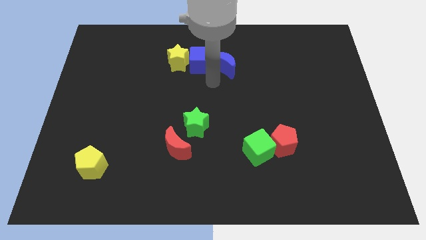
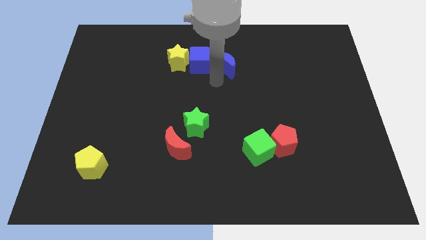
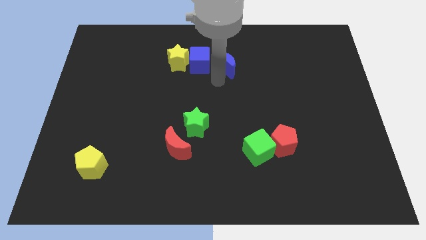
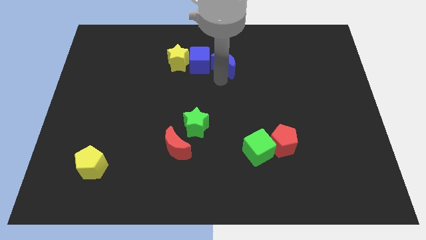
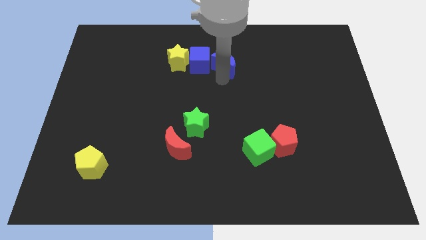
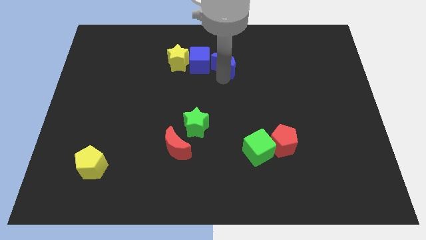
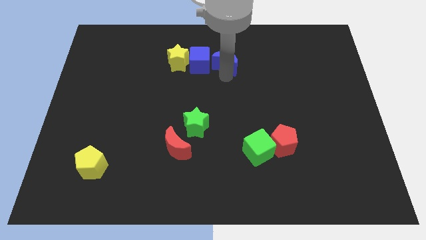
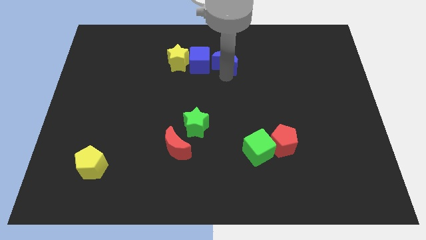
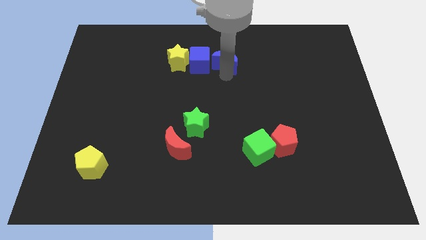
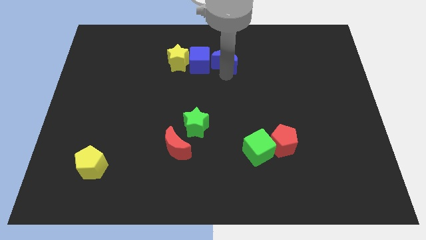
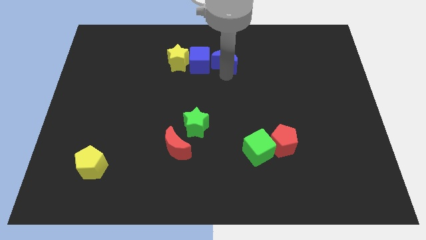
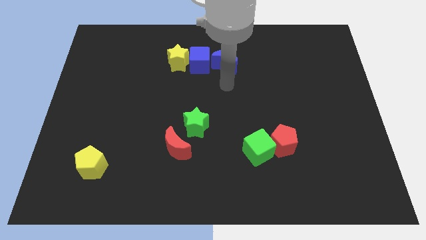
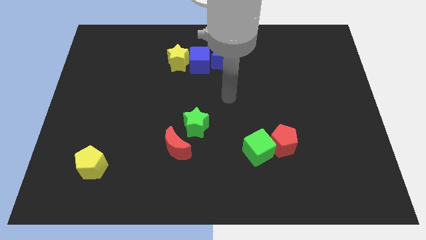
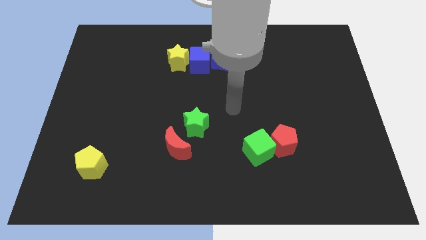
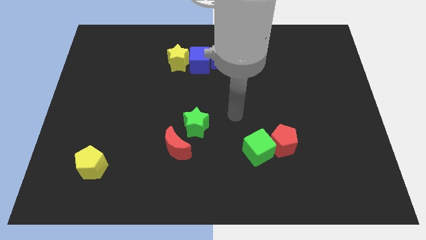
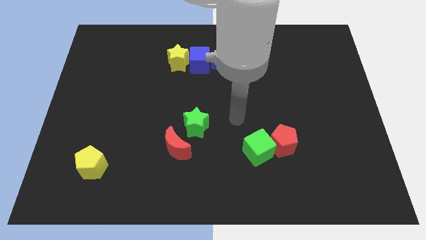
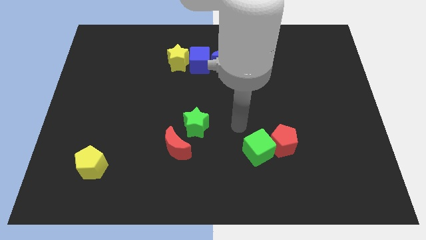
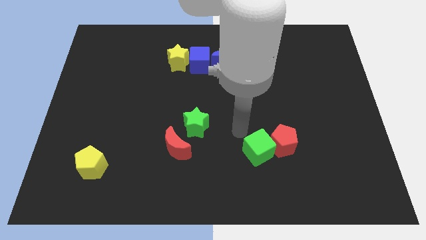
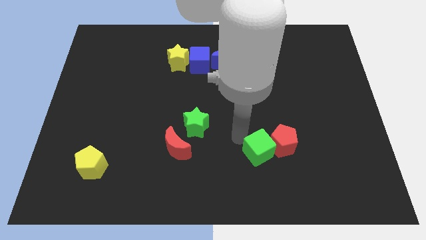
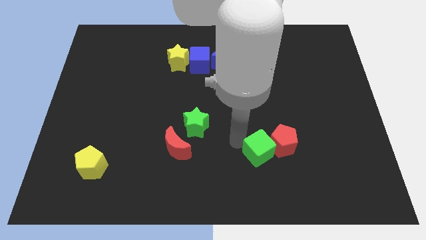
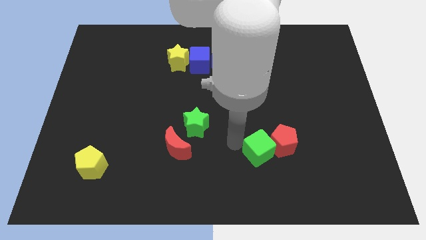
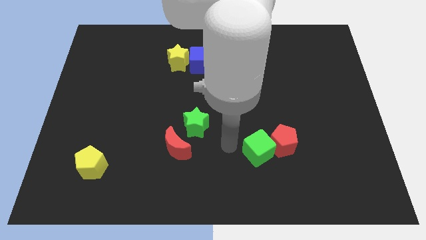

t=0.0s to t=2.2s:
move the arm to the left of green cube

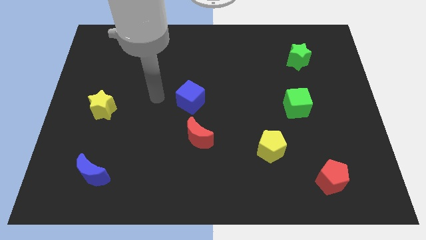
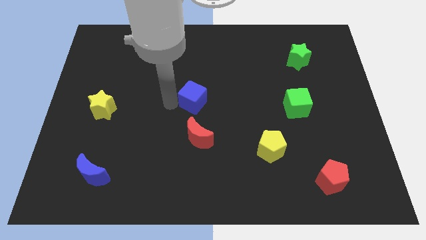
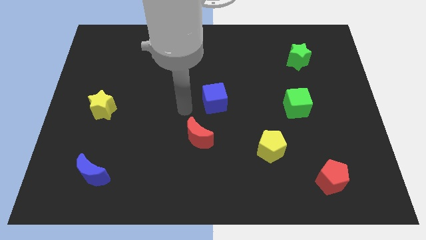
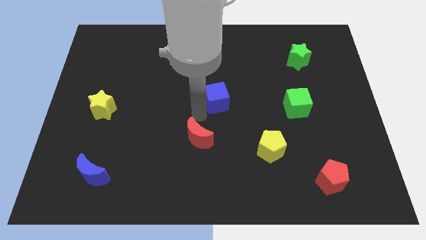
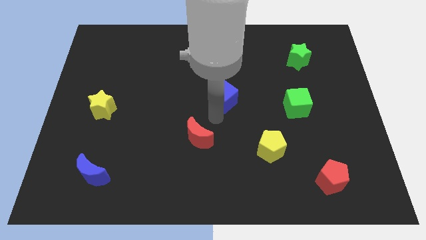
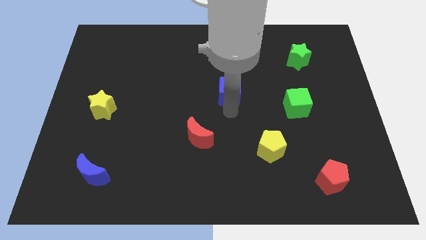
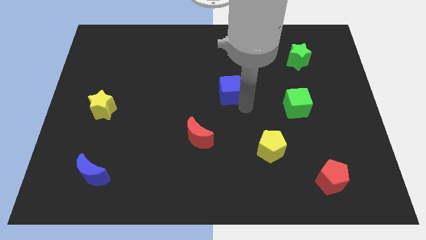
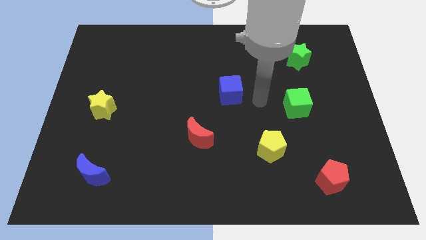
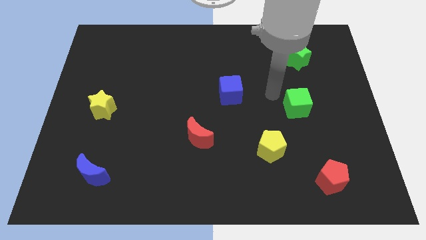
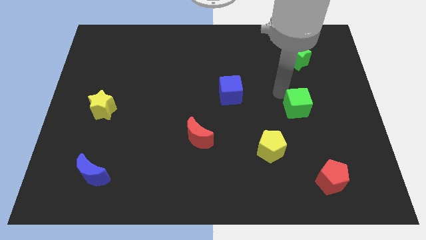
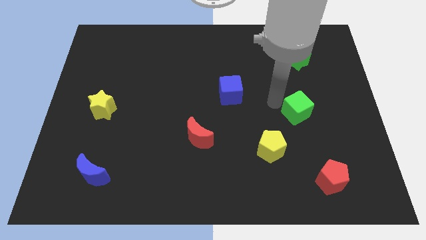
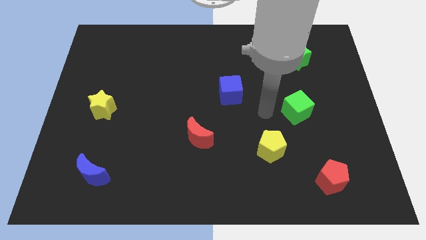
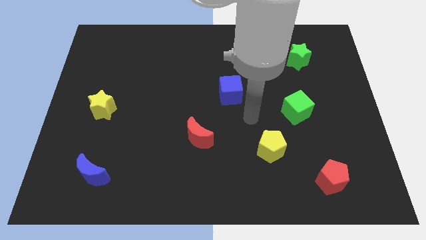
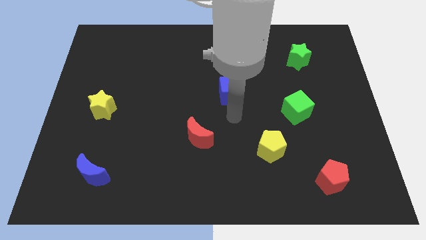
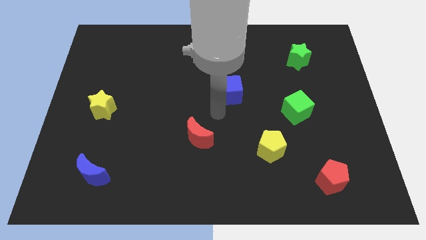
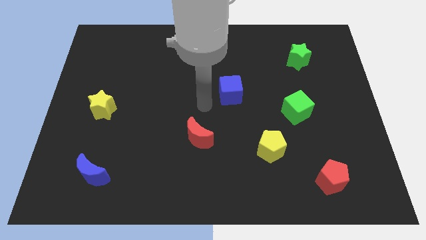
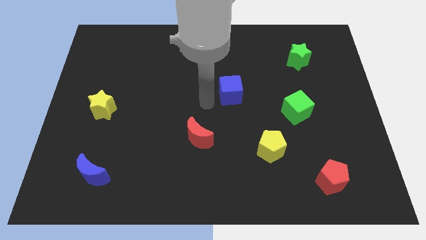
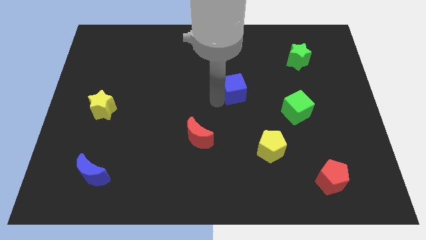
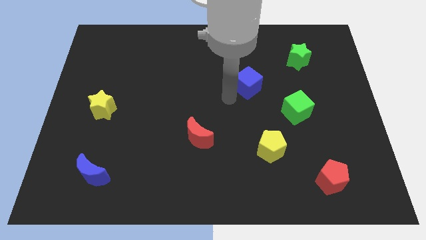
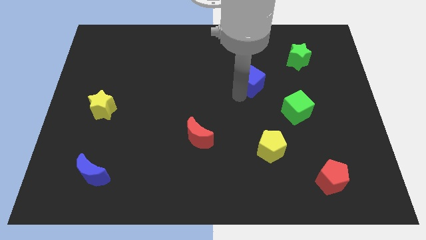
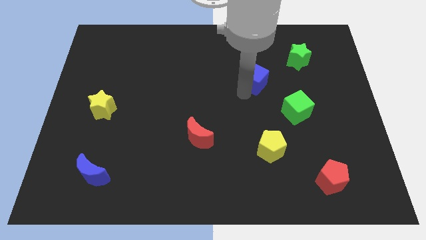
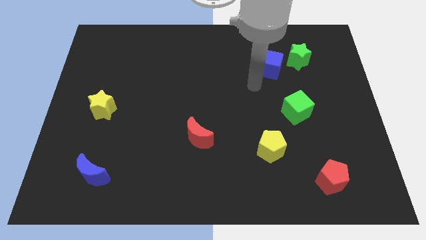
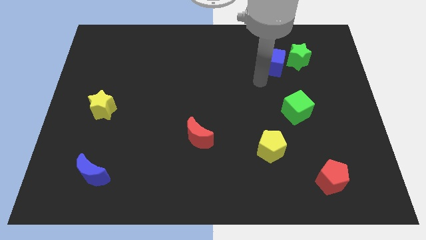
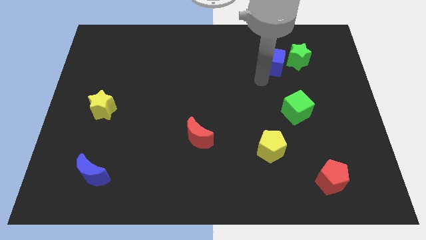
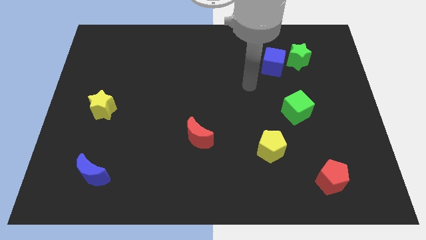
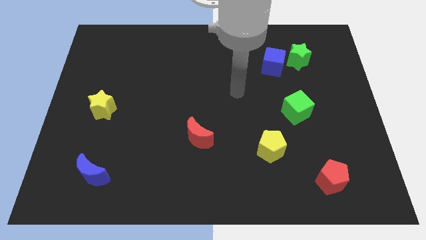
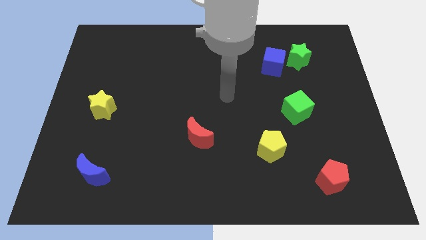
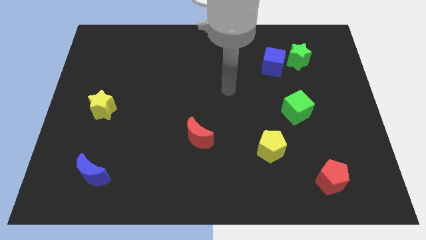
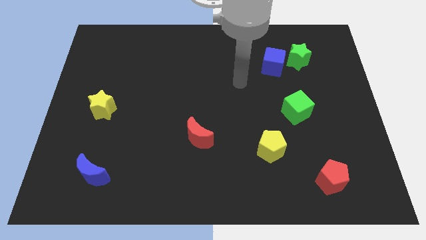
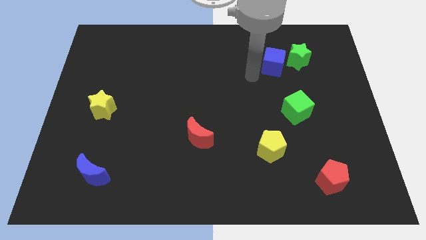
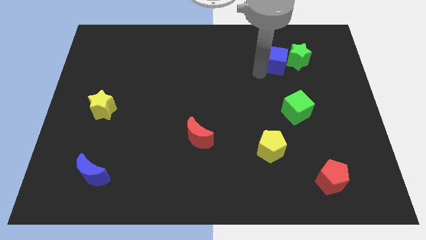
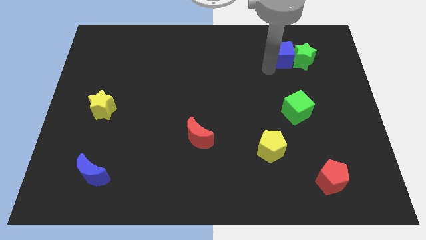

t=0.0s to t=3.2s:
place blue cube above green cube

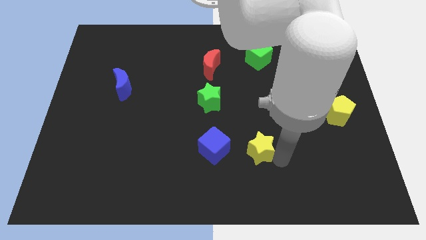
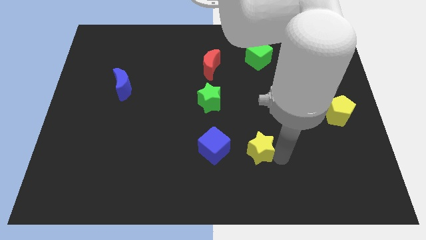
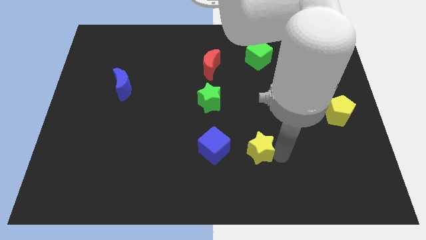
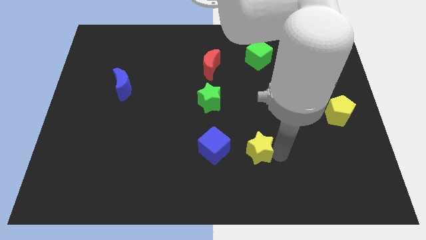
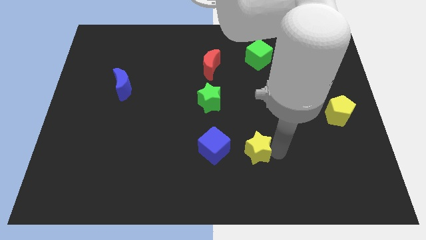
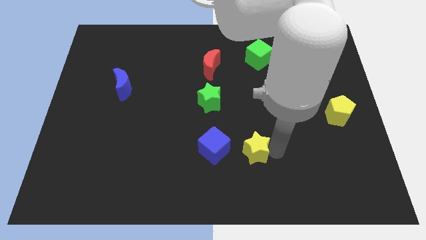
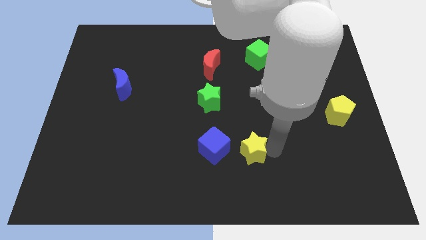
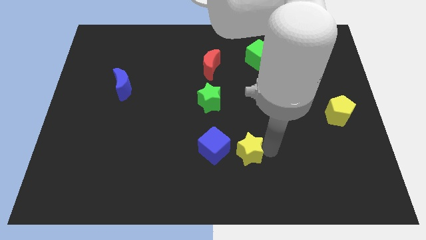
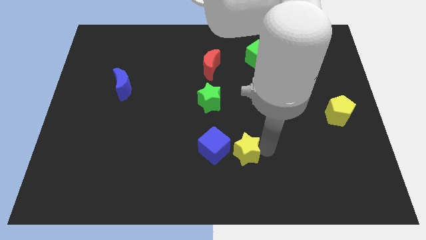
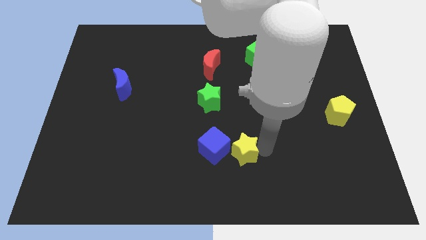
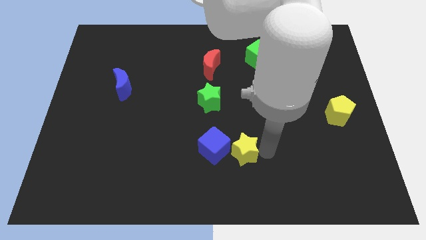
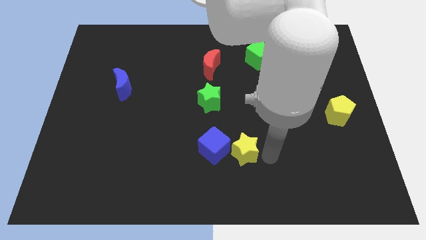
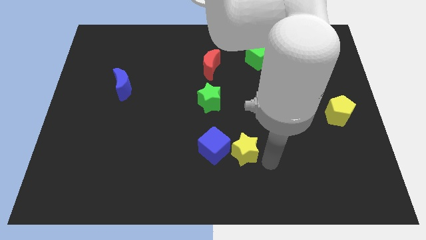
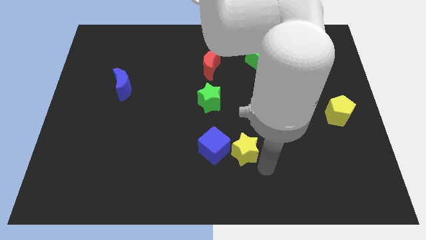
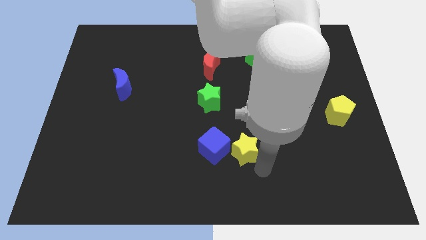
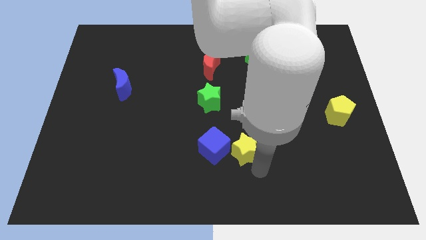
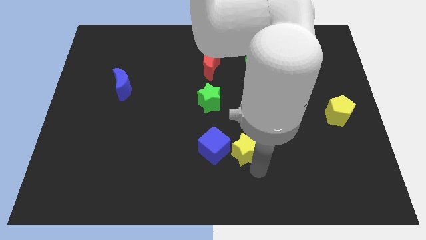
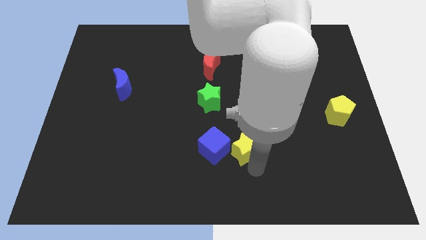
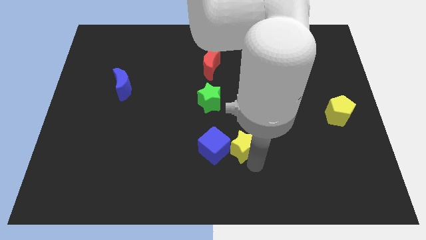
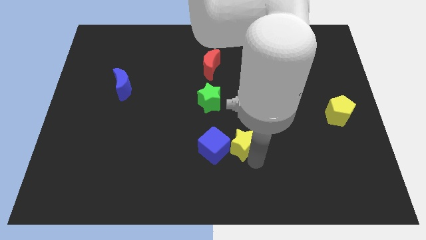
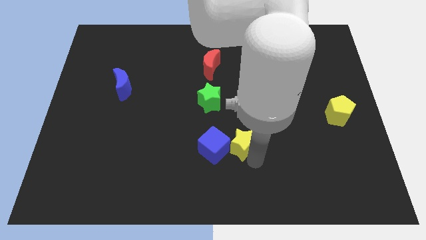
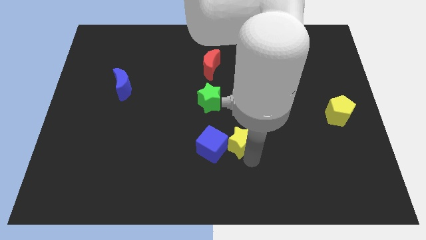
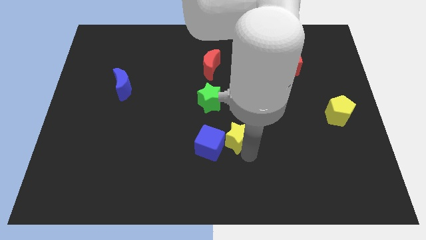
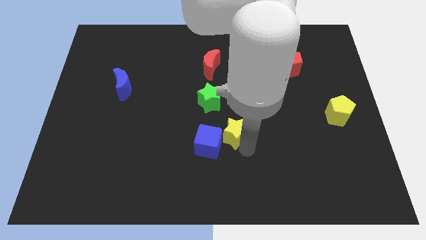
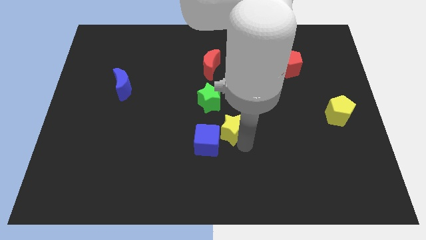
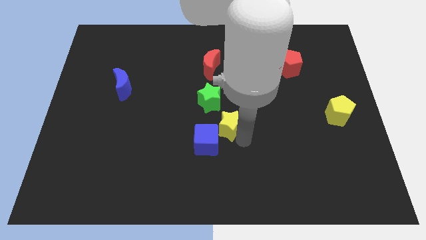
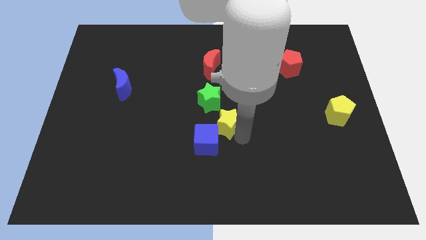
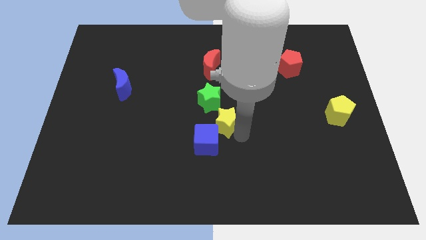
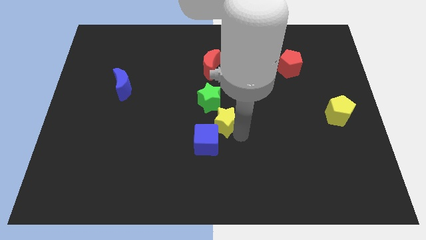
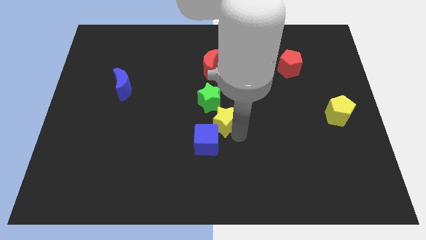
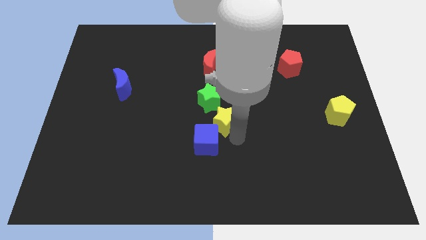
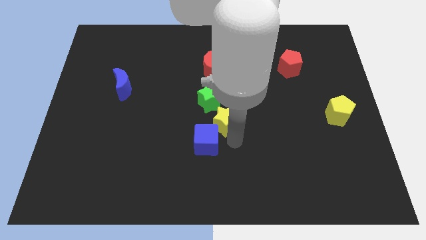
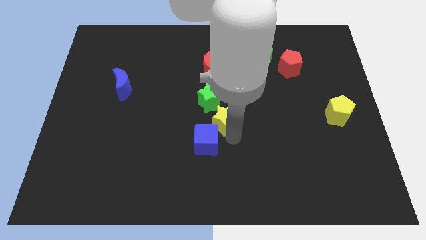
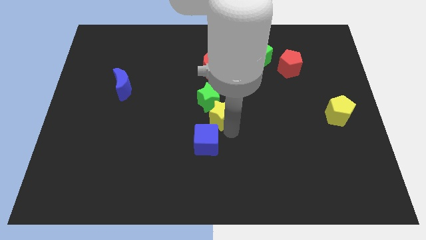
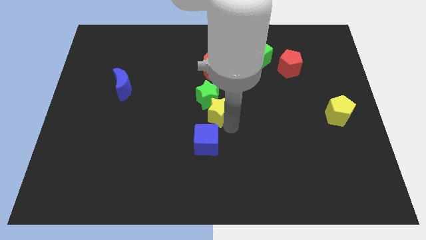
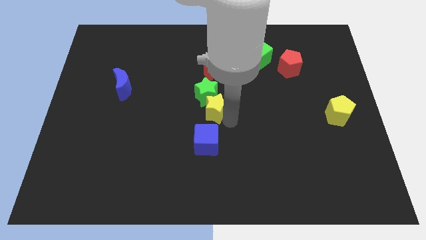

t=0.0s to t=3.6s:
push the yellow star to the bottom right side of the green star
